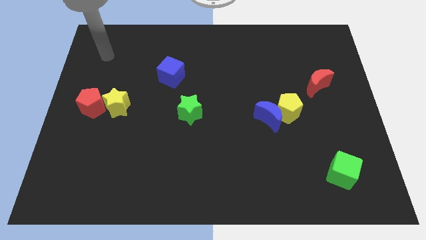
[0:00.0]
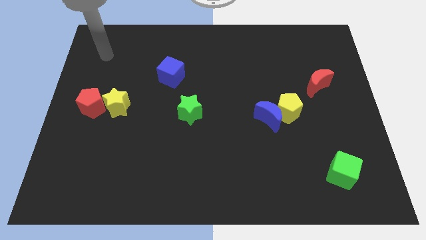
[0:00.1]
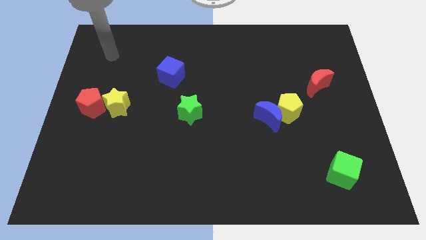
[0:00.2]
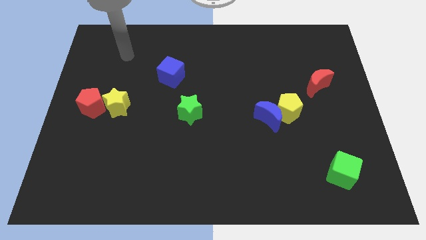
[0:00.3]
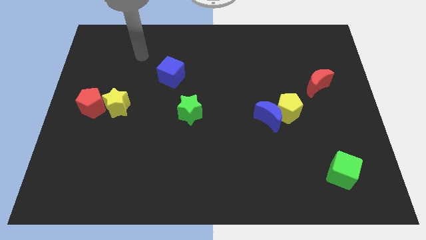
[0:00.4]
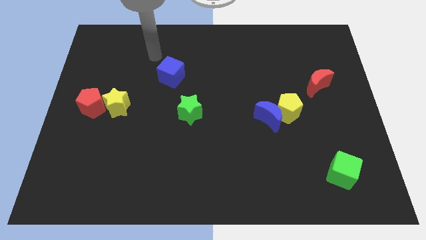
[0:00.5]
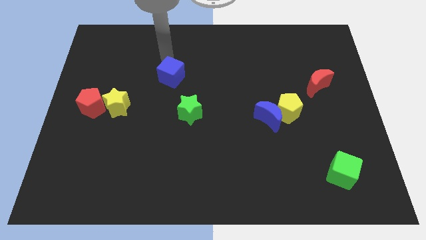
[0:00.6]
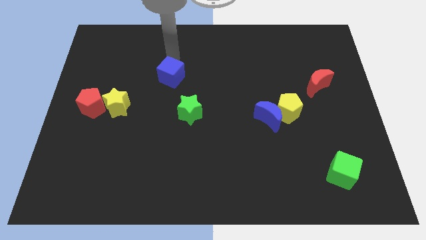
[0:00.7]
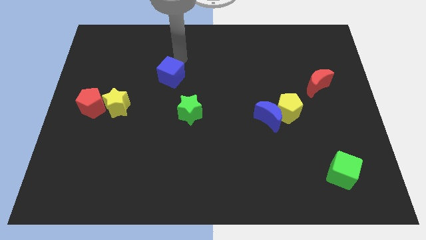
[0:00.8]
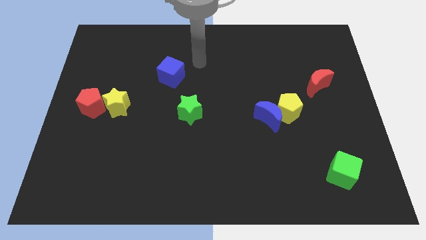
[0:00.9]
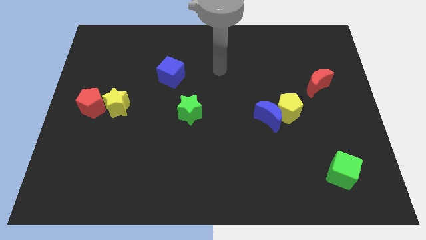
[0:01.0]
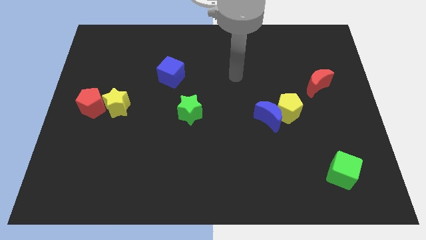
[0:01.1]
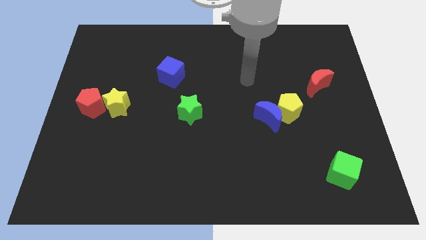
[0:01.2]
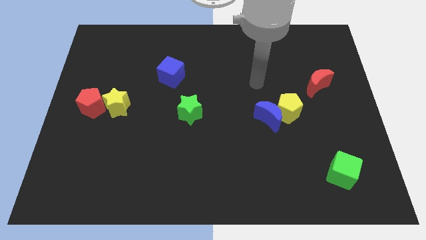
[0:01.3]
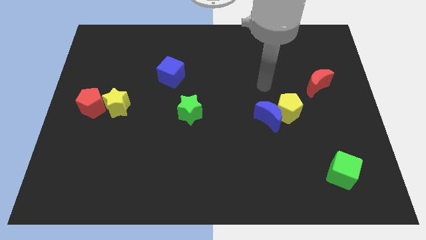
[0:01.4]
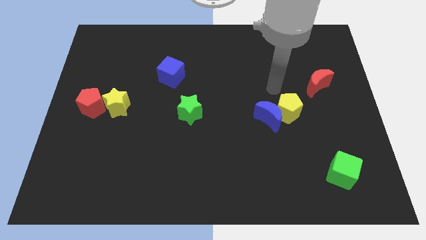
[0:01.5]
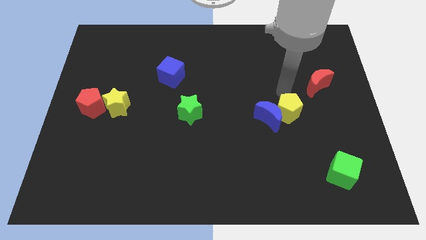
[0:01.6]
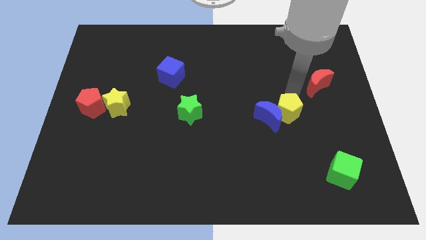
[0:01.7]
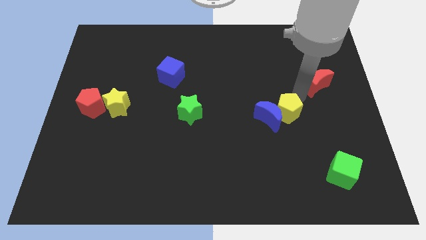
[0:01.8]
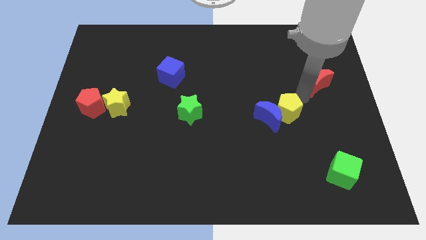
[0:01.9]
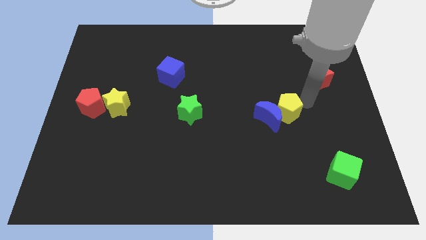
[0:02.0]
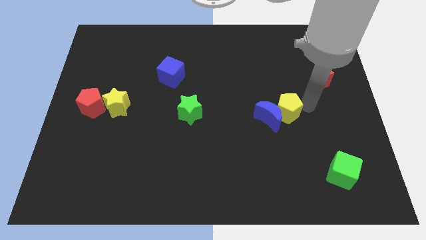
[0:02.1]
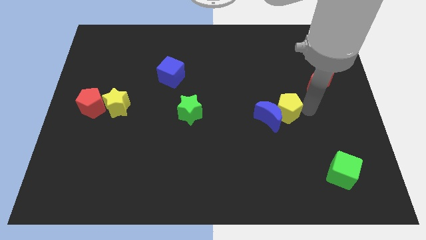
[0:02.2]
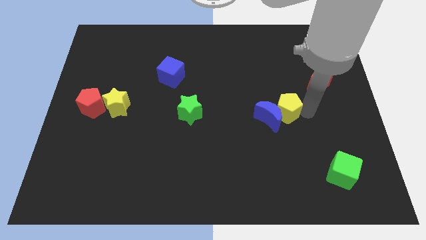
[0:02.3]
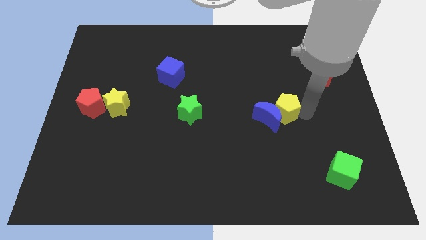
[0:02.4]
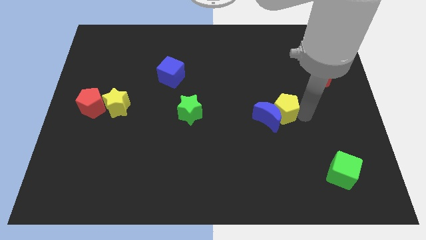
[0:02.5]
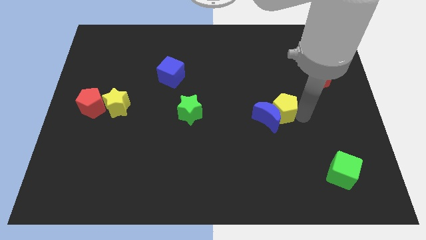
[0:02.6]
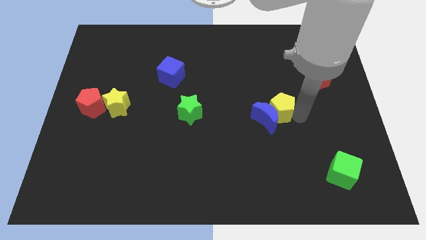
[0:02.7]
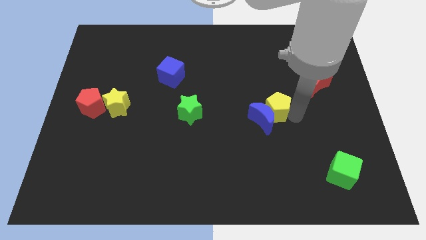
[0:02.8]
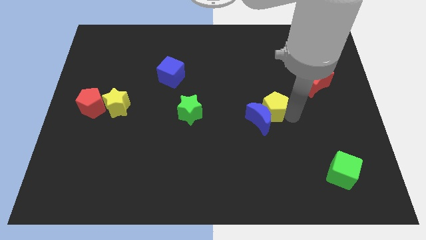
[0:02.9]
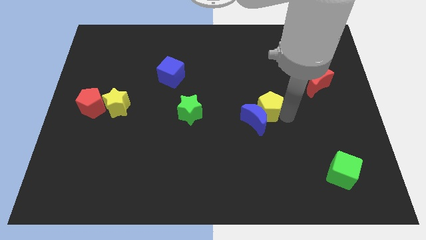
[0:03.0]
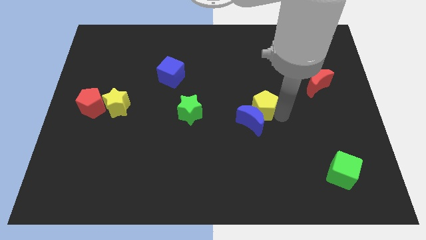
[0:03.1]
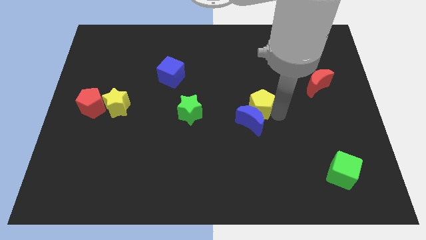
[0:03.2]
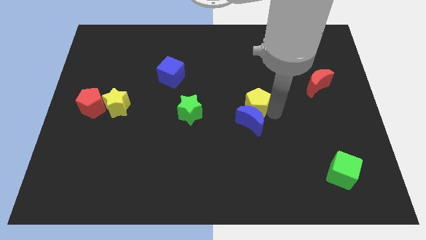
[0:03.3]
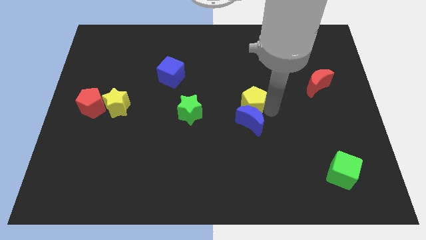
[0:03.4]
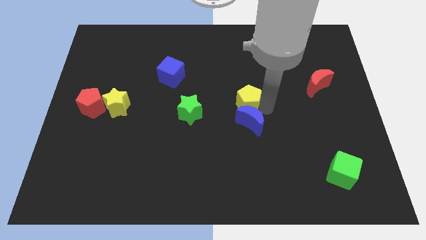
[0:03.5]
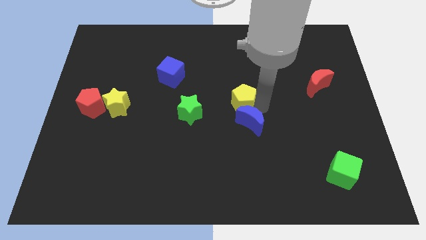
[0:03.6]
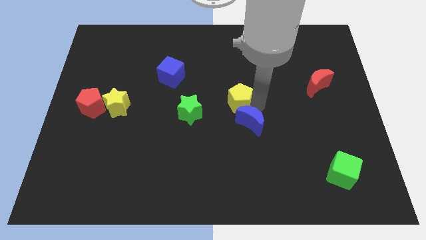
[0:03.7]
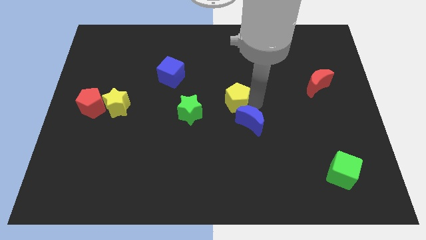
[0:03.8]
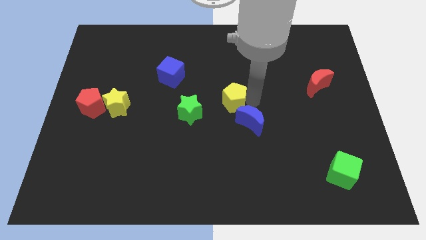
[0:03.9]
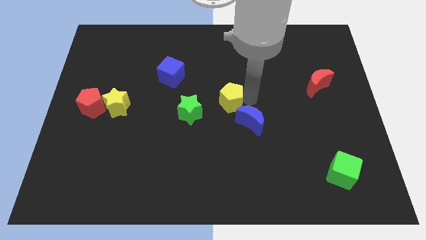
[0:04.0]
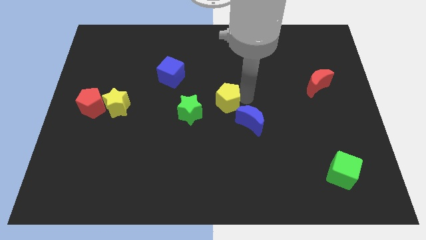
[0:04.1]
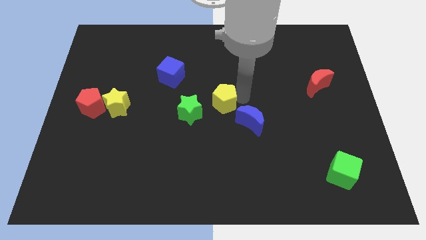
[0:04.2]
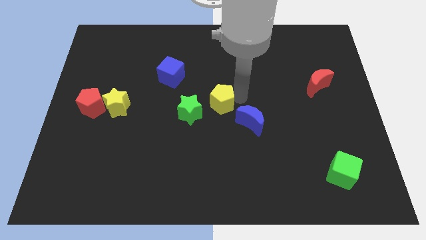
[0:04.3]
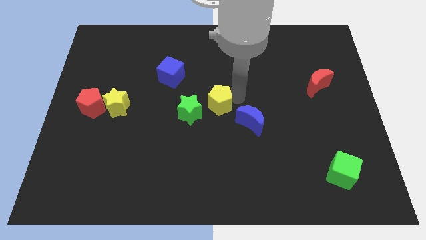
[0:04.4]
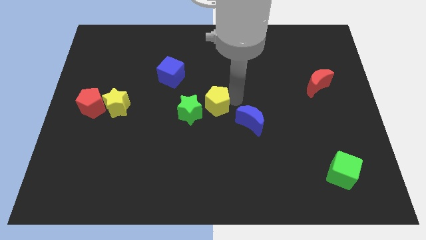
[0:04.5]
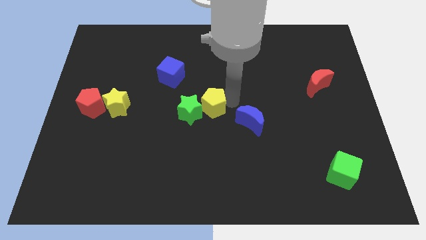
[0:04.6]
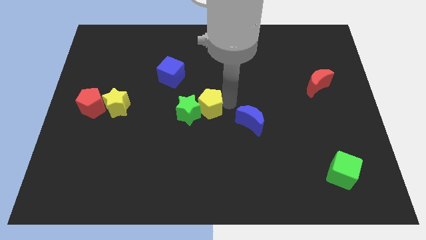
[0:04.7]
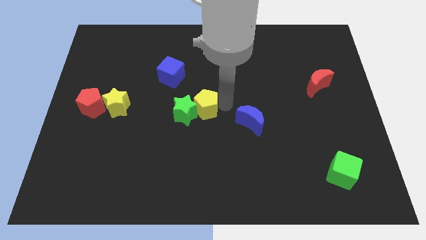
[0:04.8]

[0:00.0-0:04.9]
put the yellow pentagon next to the green star

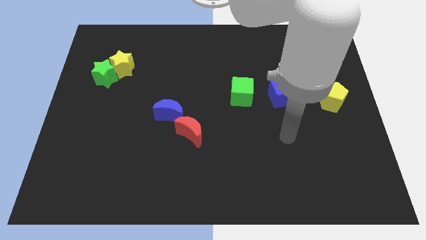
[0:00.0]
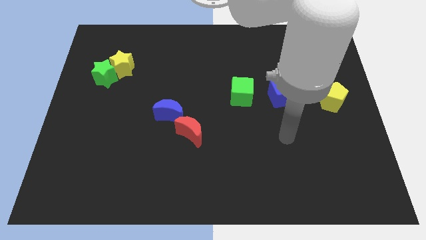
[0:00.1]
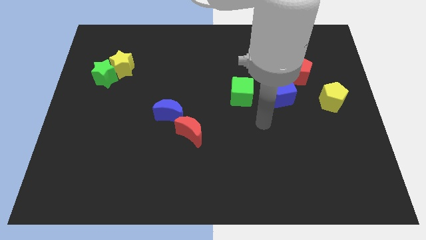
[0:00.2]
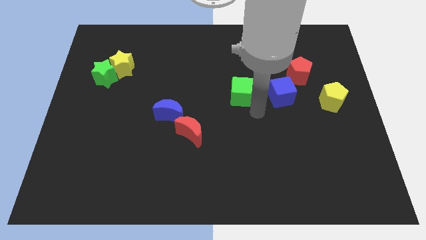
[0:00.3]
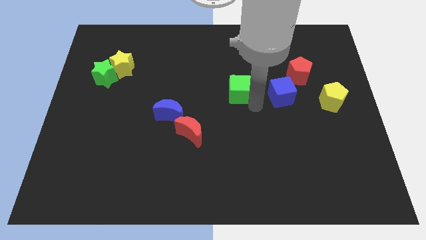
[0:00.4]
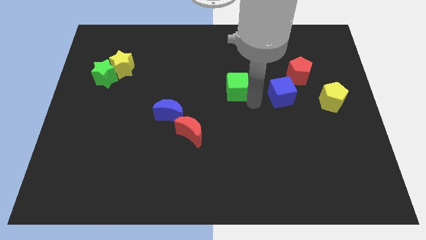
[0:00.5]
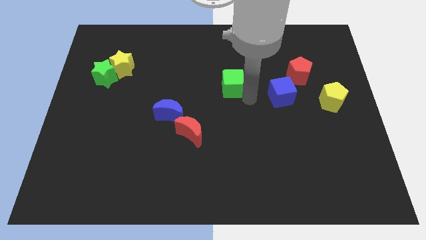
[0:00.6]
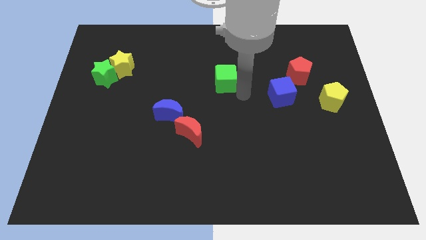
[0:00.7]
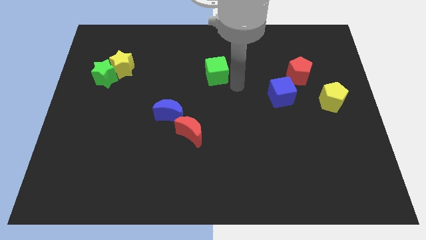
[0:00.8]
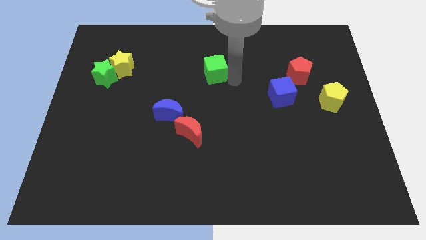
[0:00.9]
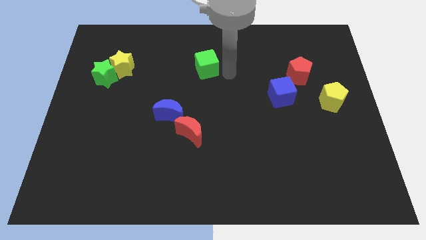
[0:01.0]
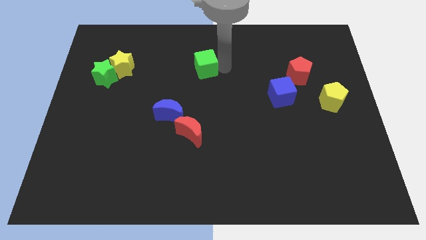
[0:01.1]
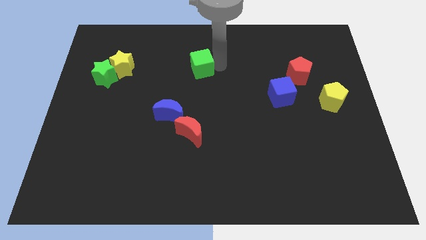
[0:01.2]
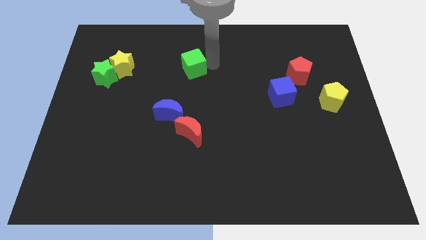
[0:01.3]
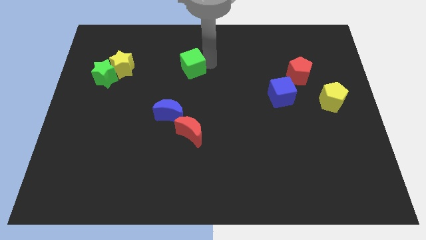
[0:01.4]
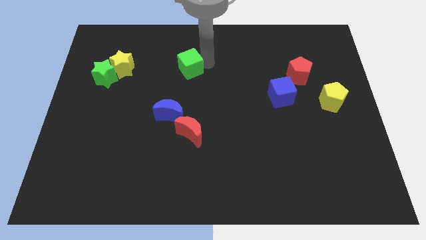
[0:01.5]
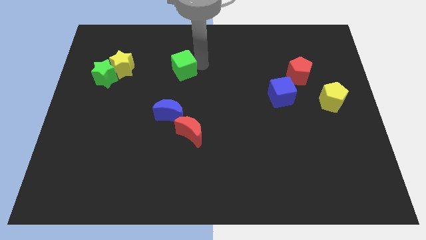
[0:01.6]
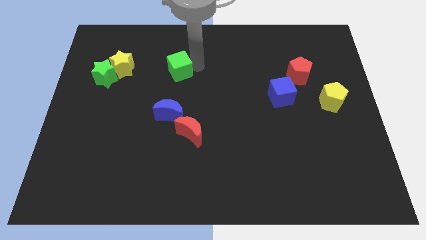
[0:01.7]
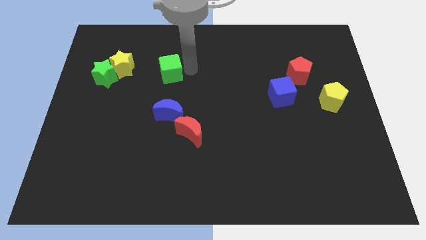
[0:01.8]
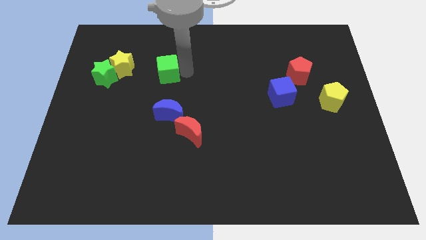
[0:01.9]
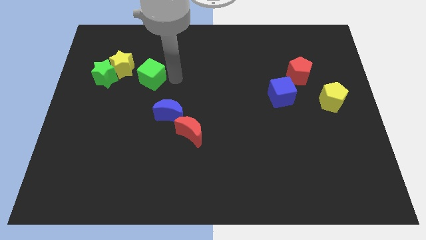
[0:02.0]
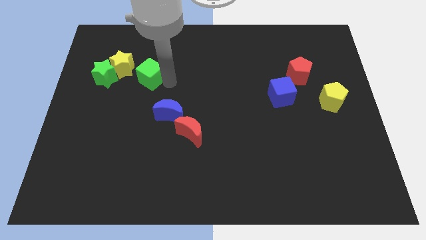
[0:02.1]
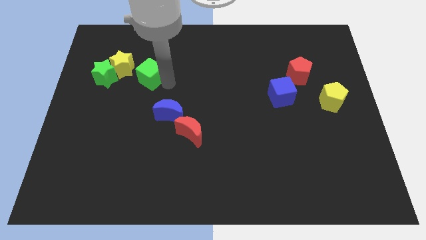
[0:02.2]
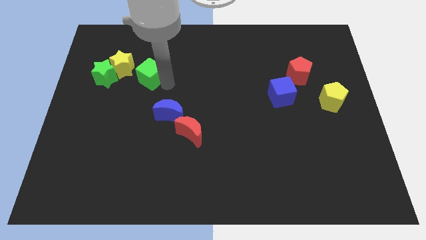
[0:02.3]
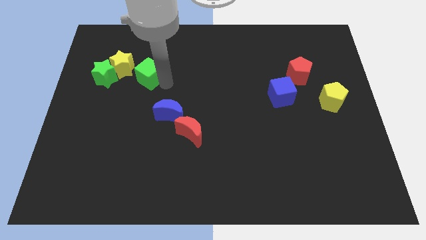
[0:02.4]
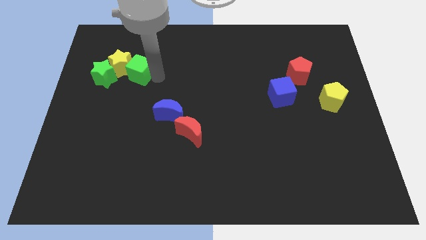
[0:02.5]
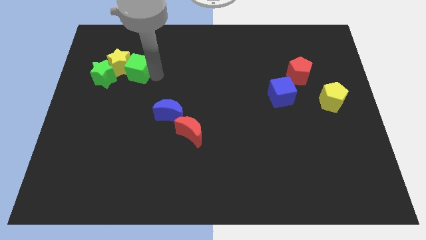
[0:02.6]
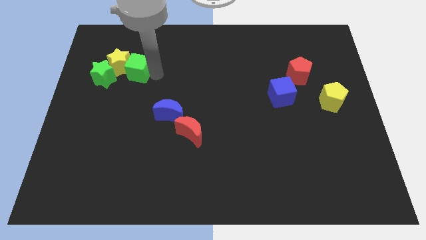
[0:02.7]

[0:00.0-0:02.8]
put the green cube to the yellow star

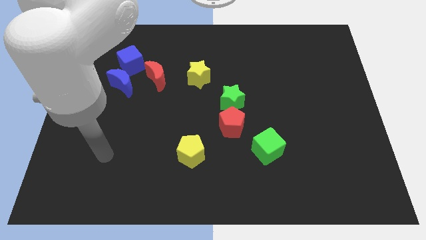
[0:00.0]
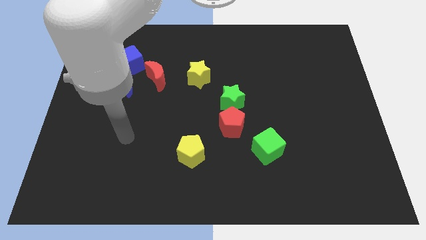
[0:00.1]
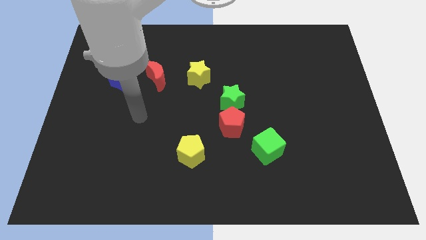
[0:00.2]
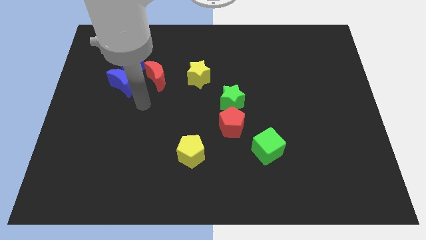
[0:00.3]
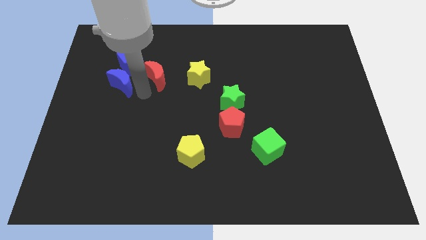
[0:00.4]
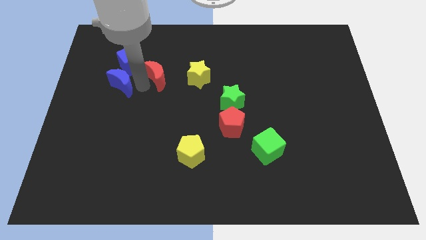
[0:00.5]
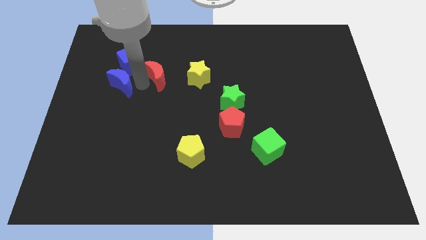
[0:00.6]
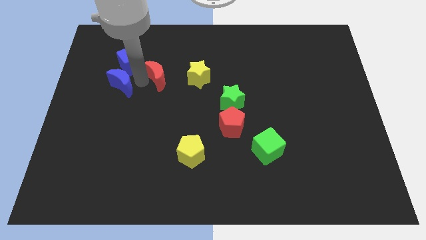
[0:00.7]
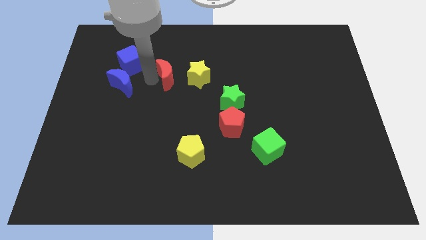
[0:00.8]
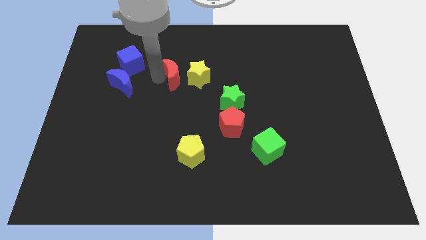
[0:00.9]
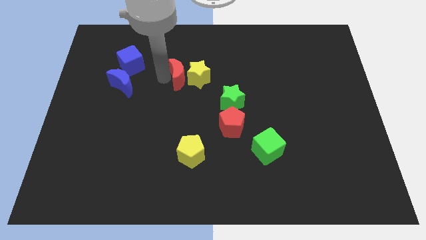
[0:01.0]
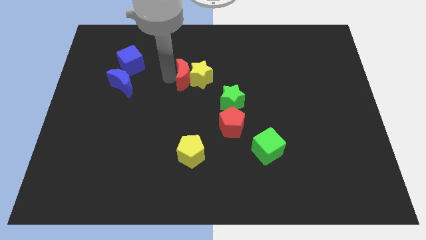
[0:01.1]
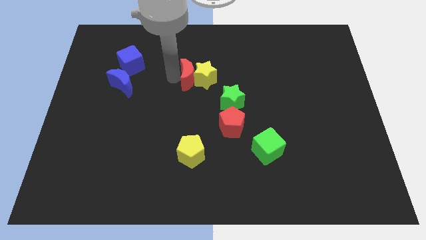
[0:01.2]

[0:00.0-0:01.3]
push the red moon to the yellow star
